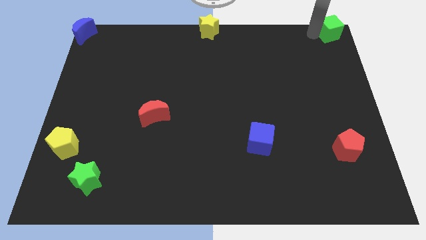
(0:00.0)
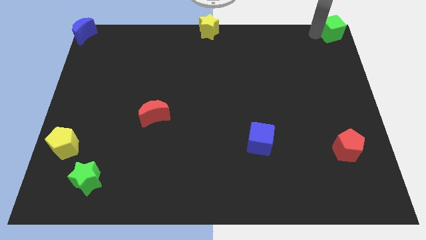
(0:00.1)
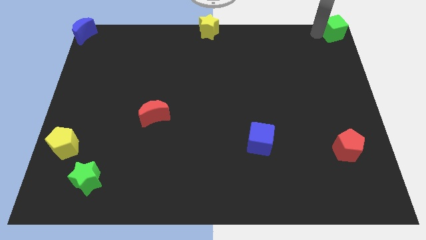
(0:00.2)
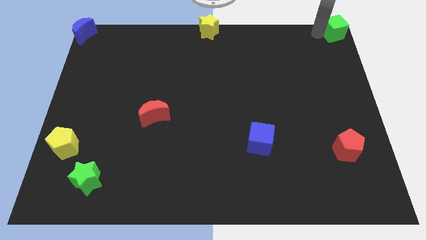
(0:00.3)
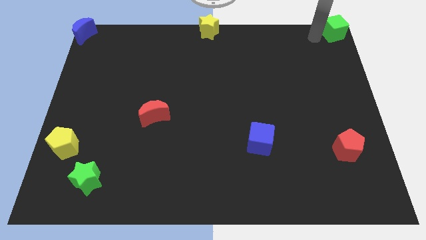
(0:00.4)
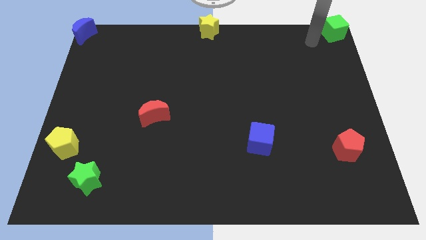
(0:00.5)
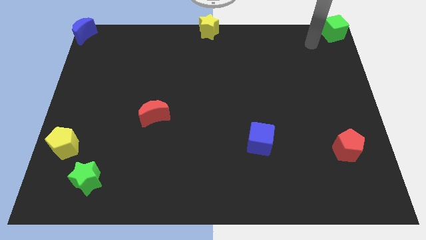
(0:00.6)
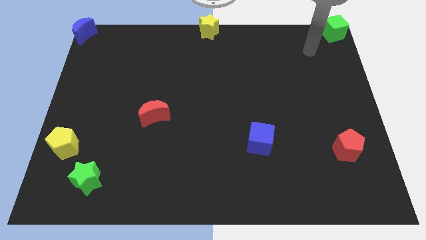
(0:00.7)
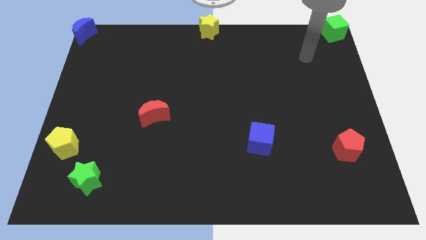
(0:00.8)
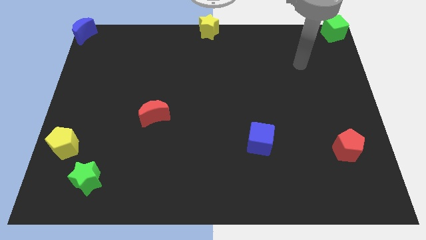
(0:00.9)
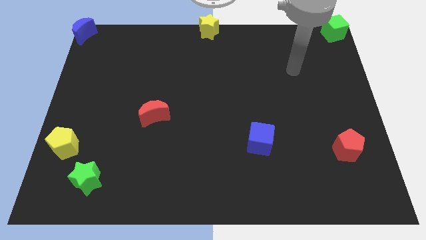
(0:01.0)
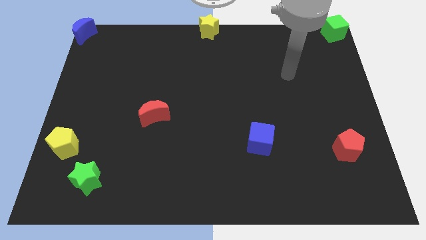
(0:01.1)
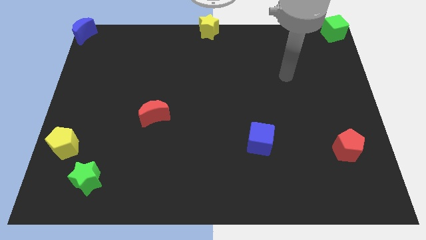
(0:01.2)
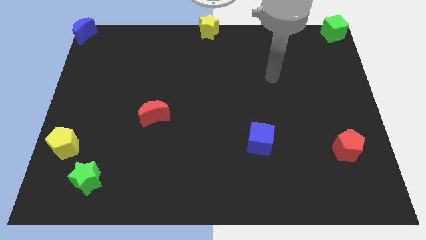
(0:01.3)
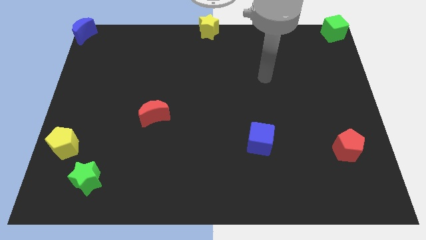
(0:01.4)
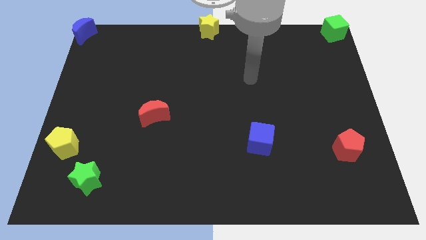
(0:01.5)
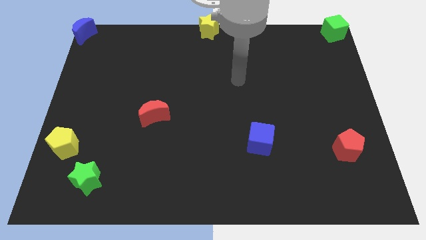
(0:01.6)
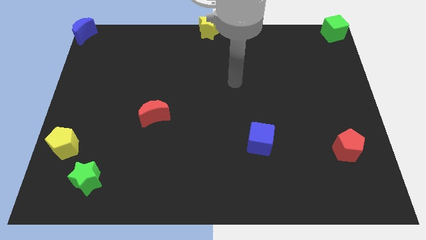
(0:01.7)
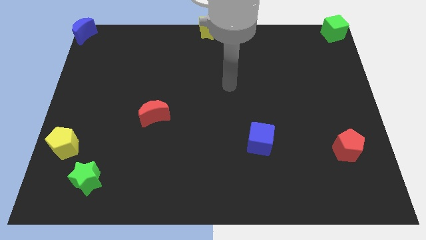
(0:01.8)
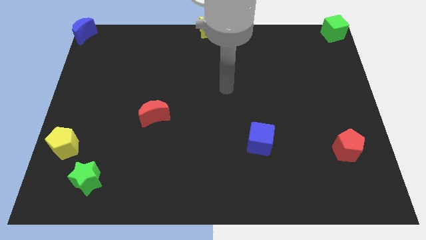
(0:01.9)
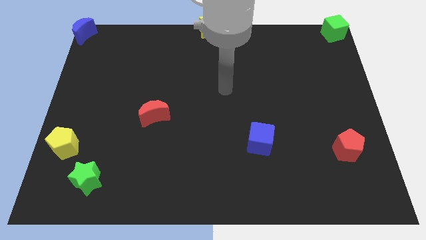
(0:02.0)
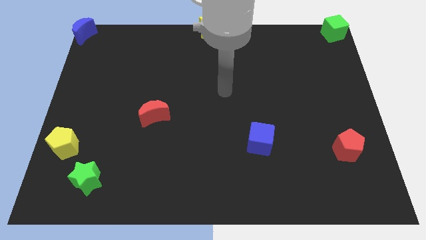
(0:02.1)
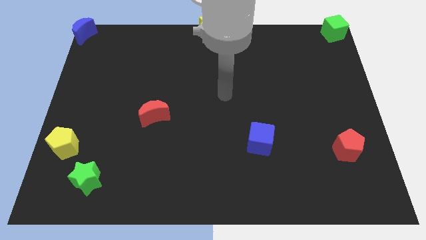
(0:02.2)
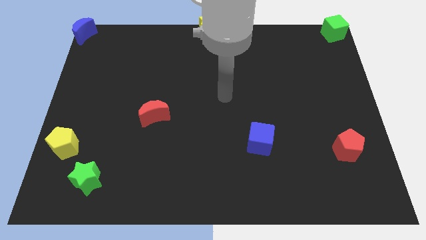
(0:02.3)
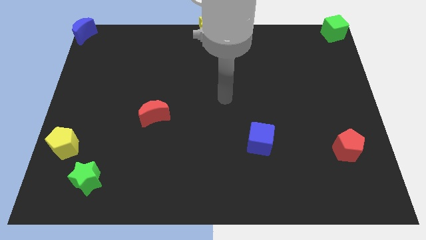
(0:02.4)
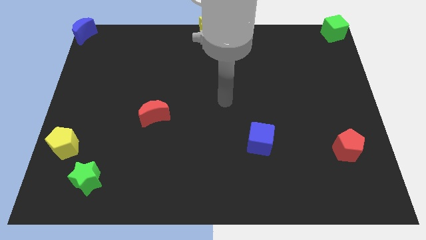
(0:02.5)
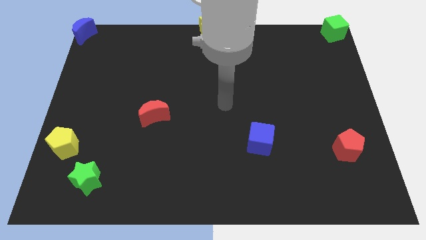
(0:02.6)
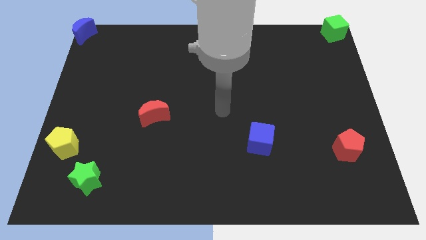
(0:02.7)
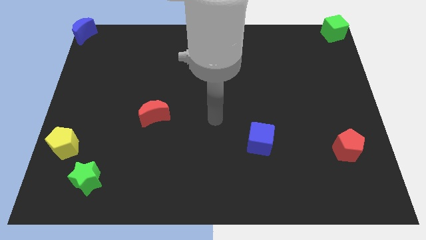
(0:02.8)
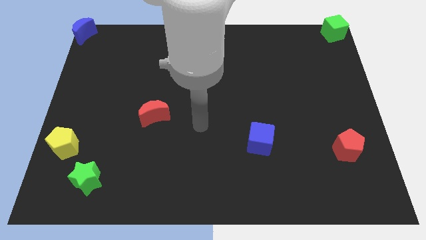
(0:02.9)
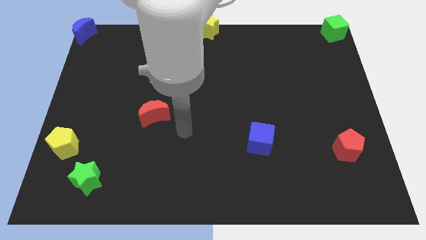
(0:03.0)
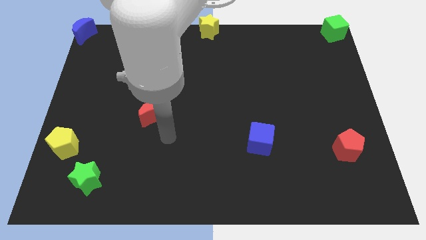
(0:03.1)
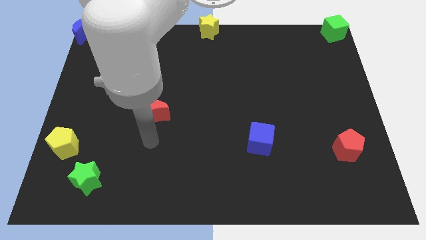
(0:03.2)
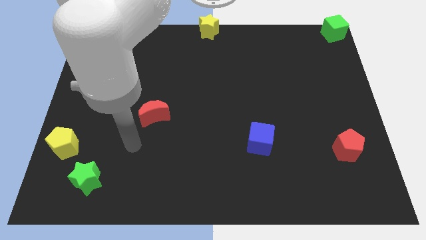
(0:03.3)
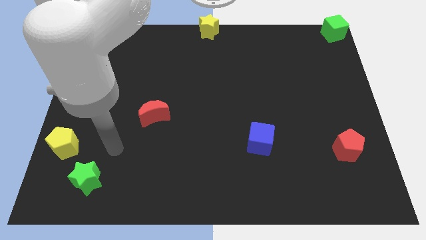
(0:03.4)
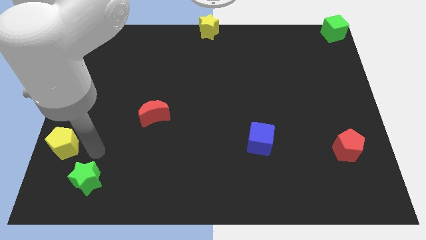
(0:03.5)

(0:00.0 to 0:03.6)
move the arm away from the green cube

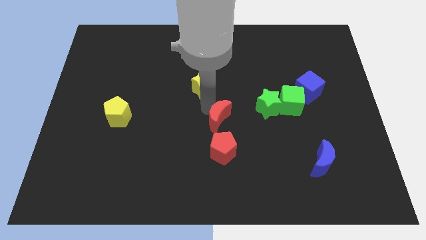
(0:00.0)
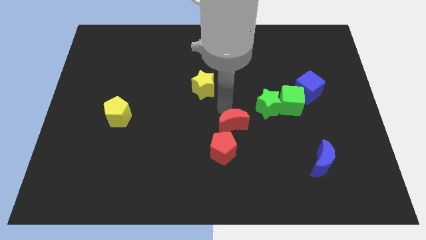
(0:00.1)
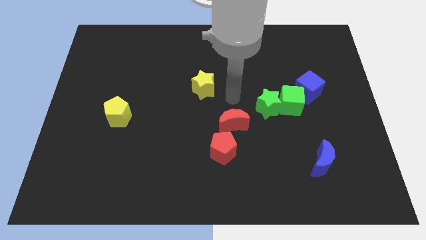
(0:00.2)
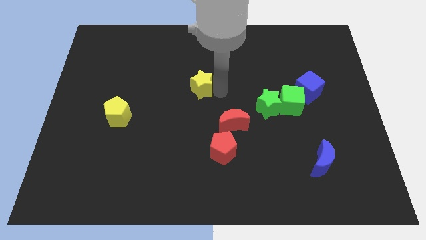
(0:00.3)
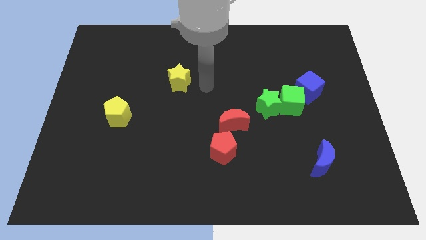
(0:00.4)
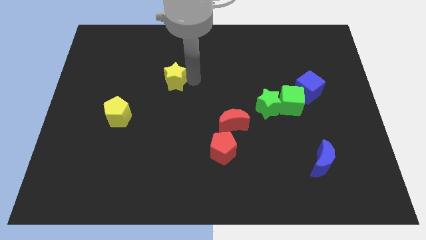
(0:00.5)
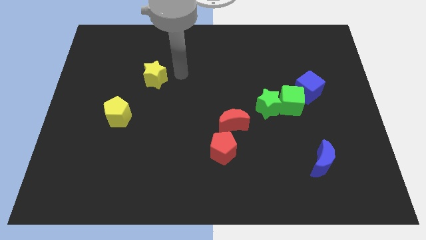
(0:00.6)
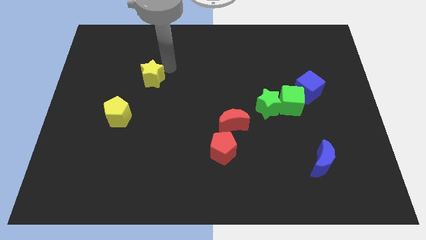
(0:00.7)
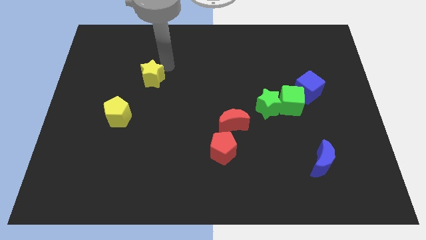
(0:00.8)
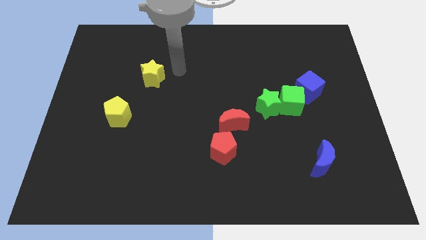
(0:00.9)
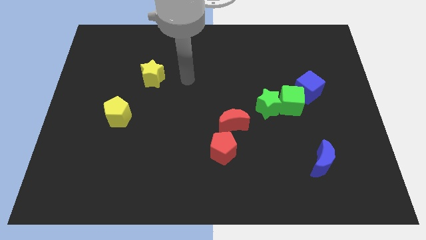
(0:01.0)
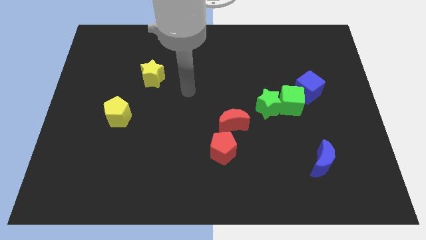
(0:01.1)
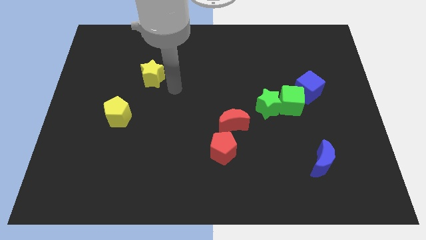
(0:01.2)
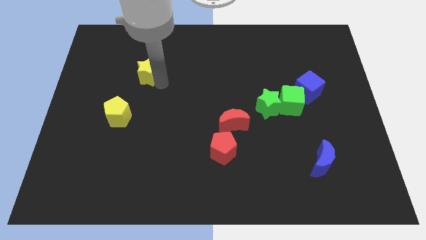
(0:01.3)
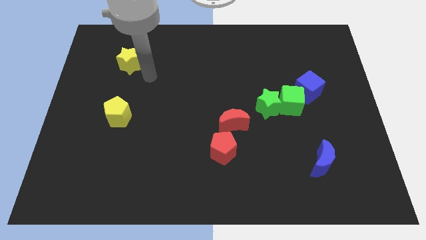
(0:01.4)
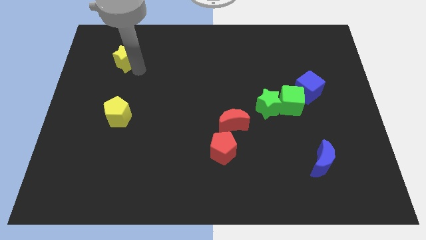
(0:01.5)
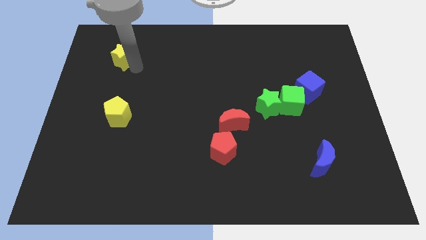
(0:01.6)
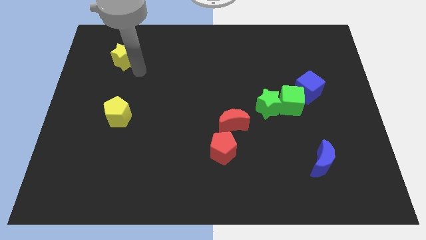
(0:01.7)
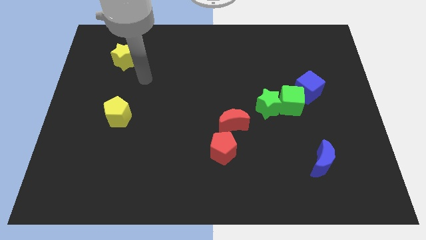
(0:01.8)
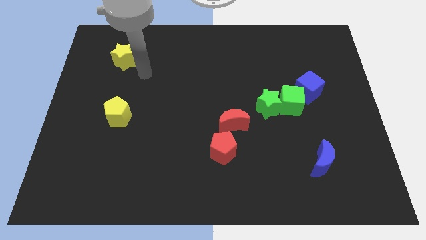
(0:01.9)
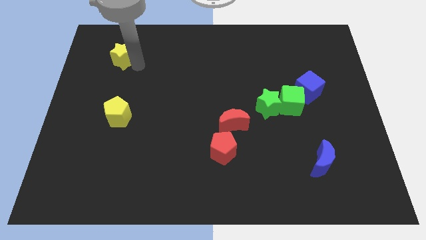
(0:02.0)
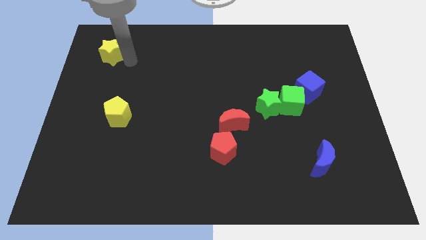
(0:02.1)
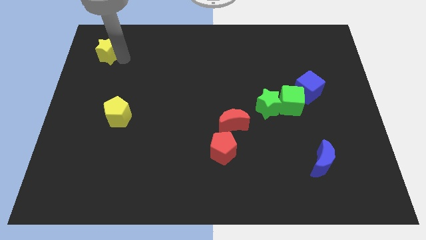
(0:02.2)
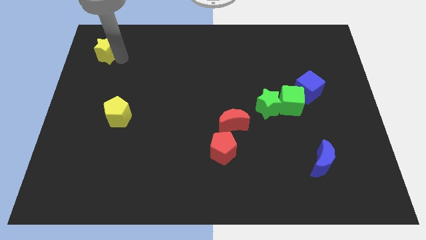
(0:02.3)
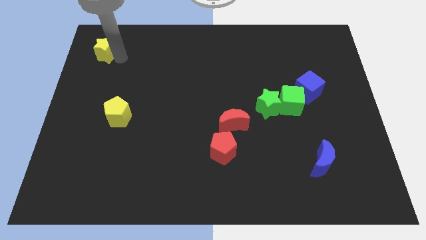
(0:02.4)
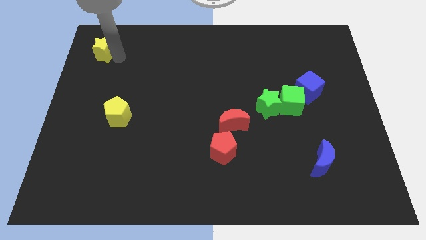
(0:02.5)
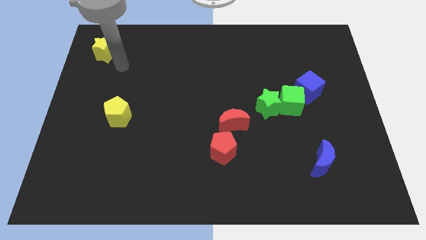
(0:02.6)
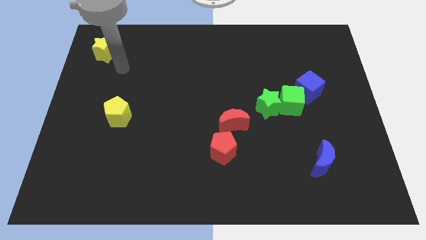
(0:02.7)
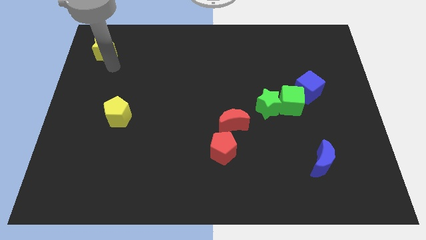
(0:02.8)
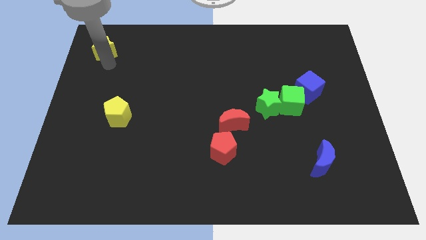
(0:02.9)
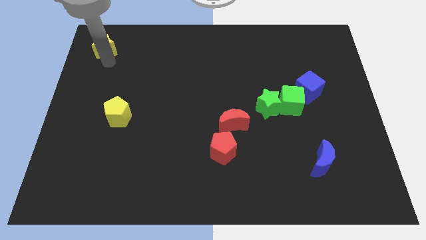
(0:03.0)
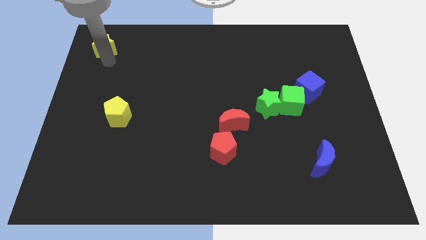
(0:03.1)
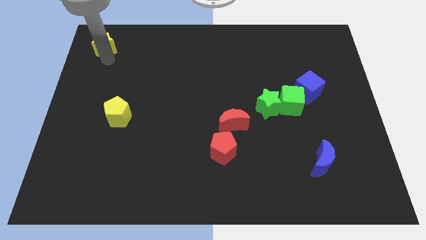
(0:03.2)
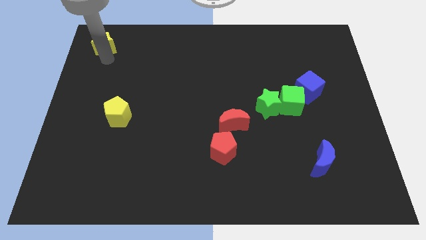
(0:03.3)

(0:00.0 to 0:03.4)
push the yellow star towards the top left side of the board

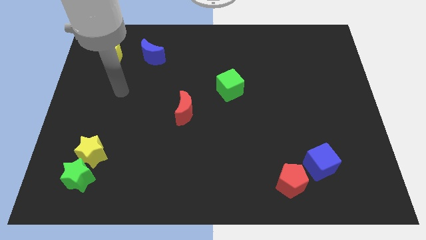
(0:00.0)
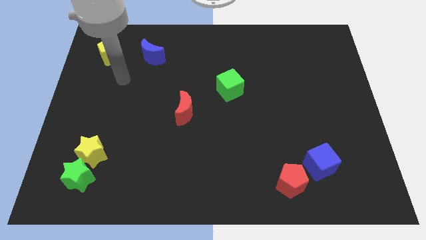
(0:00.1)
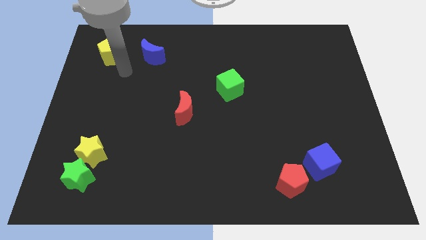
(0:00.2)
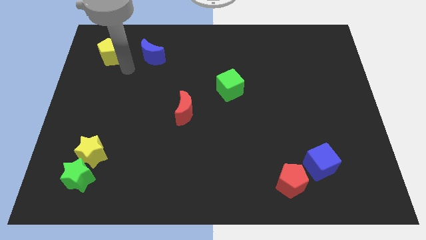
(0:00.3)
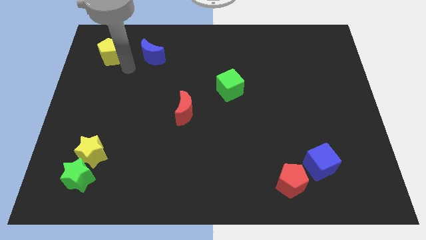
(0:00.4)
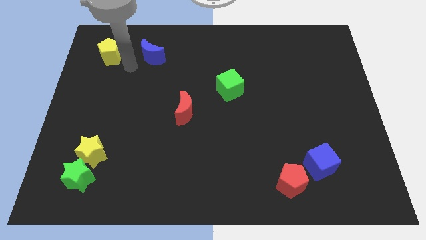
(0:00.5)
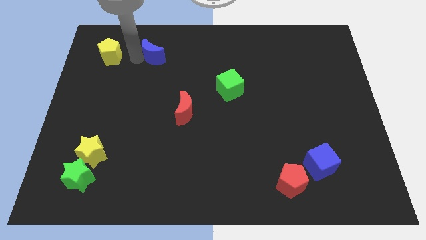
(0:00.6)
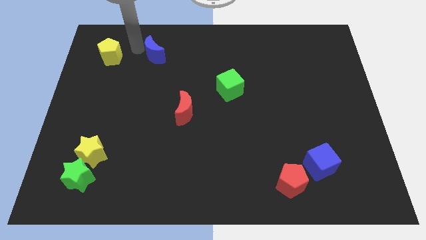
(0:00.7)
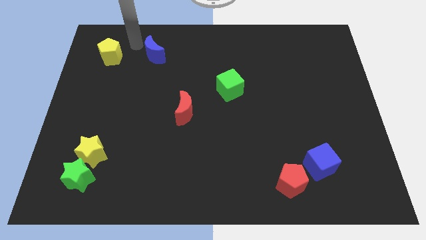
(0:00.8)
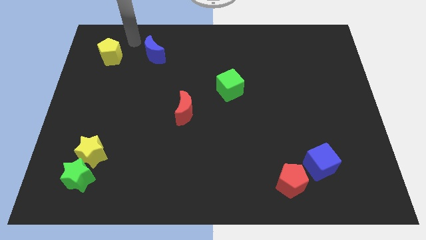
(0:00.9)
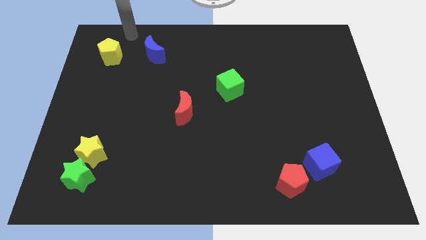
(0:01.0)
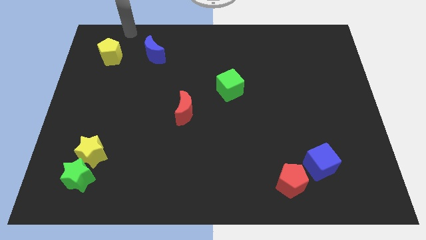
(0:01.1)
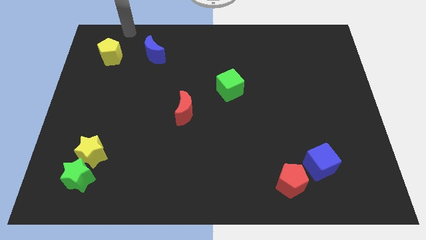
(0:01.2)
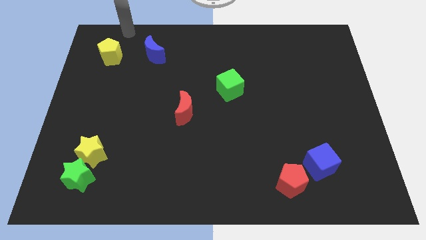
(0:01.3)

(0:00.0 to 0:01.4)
slightly move the blue crescent to the right of the board

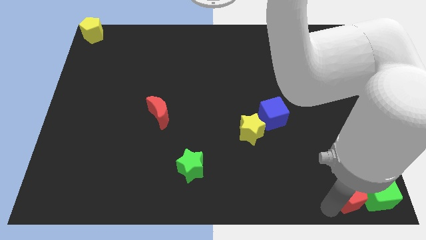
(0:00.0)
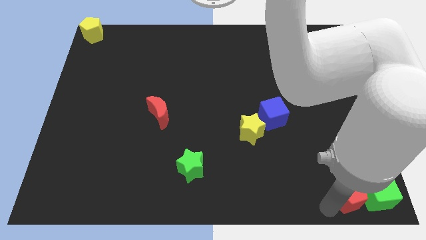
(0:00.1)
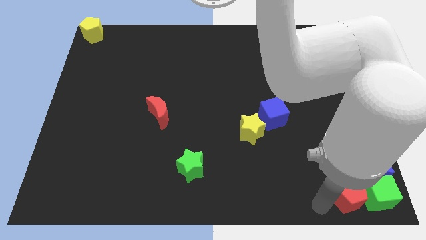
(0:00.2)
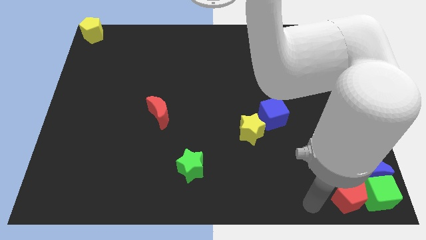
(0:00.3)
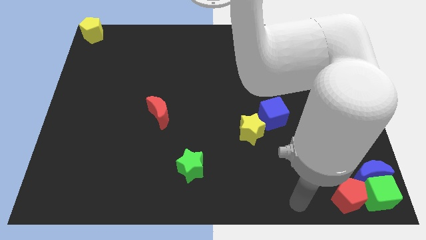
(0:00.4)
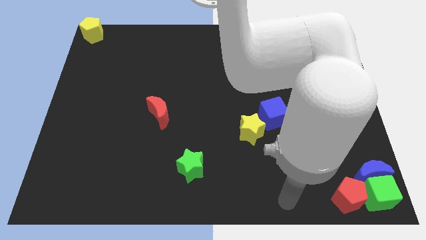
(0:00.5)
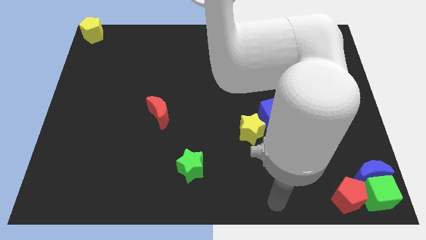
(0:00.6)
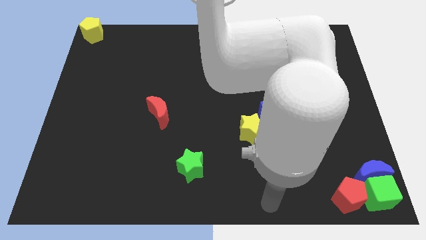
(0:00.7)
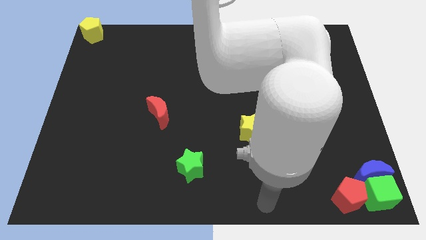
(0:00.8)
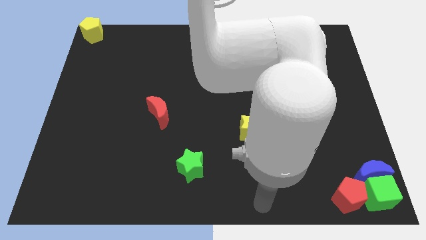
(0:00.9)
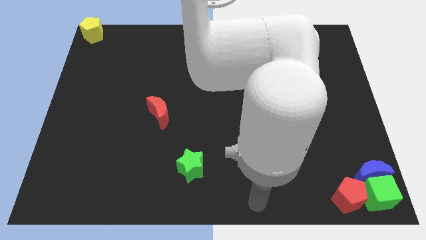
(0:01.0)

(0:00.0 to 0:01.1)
move your hand away from the left side of the red pentagon
